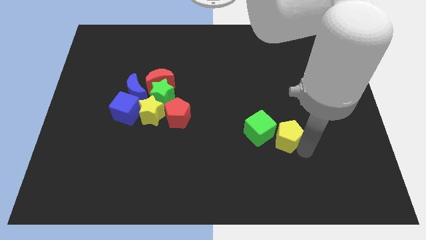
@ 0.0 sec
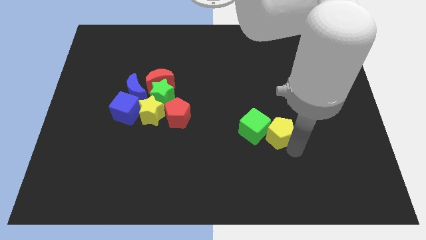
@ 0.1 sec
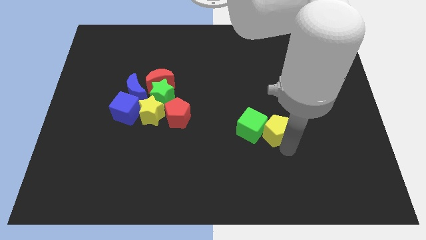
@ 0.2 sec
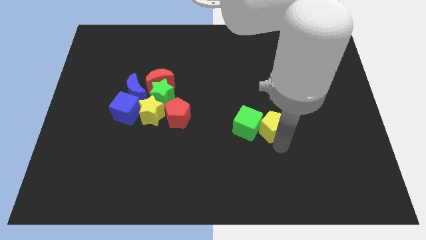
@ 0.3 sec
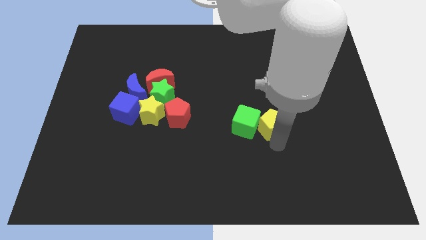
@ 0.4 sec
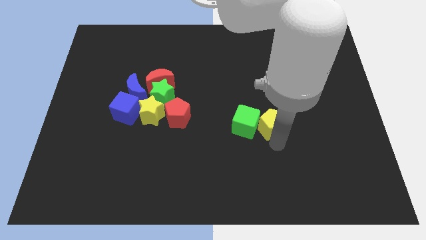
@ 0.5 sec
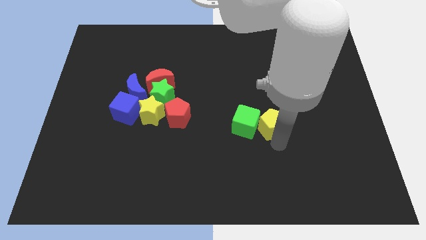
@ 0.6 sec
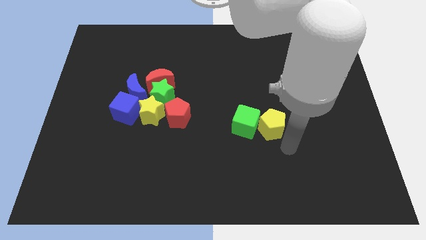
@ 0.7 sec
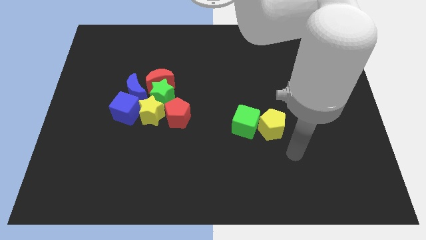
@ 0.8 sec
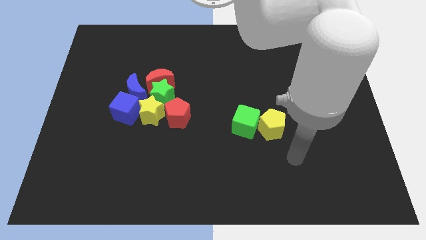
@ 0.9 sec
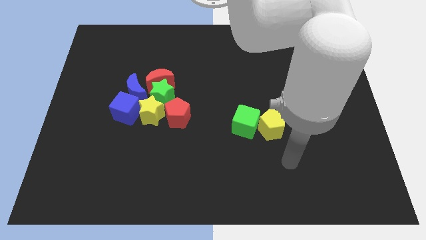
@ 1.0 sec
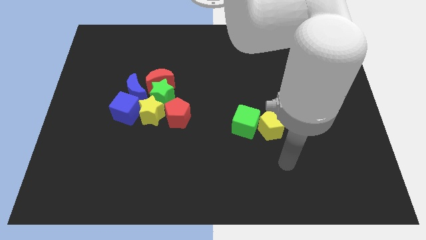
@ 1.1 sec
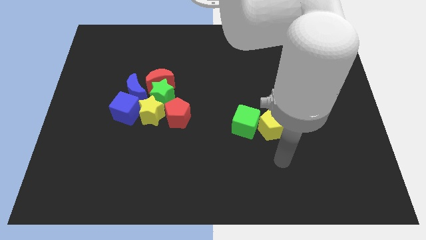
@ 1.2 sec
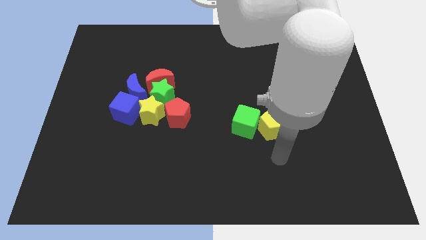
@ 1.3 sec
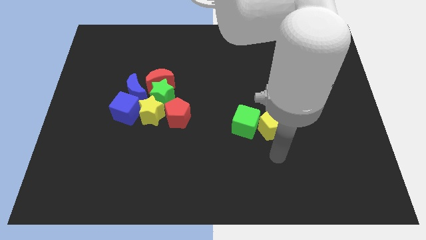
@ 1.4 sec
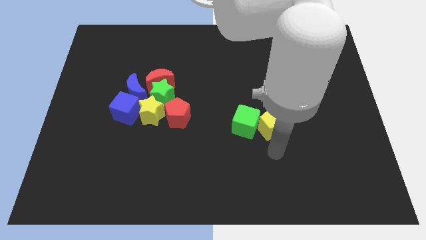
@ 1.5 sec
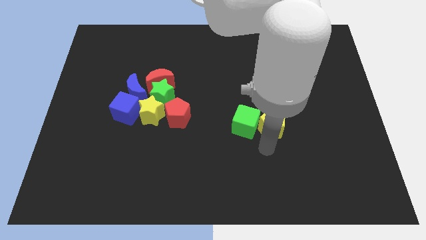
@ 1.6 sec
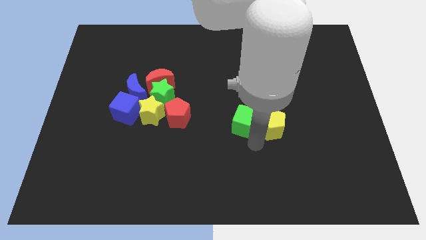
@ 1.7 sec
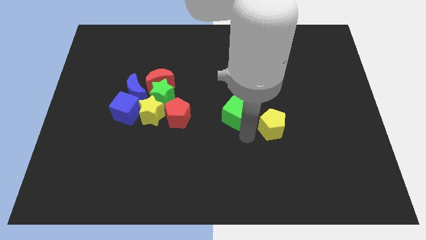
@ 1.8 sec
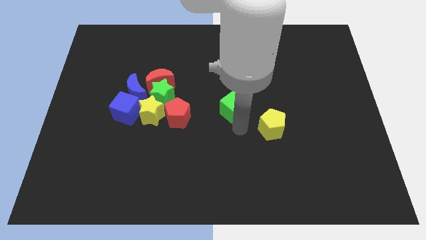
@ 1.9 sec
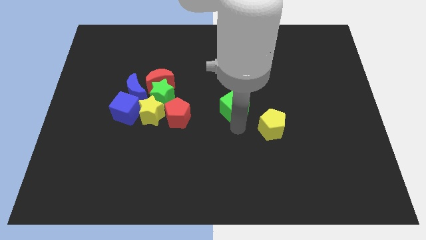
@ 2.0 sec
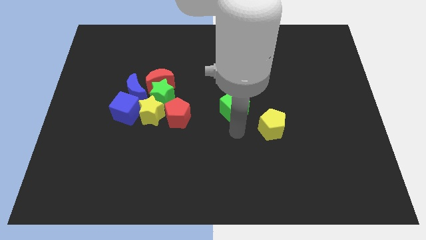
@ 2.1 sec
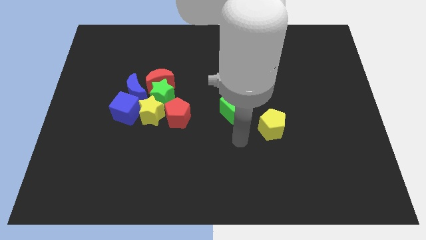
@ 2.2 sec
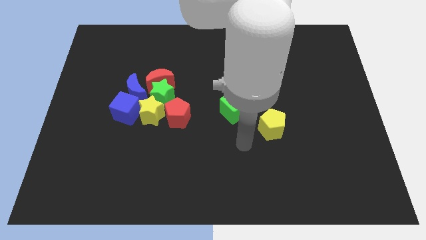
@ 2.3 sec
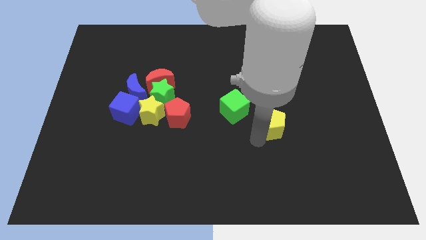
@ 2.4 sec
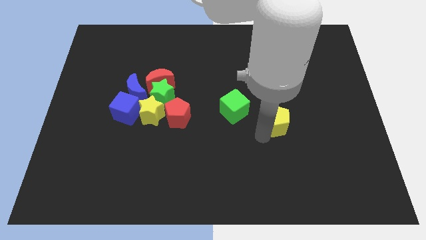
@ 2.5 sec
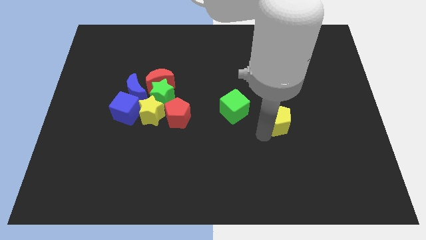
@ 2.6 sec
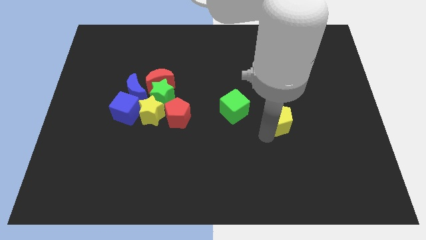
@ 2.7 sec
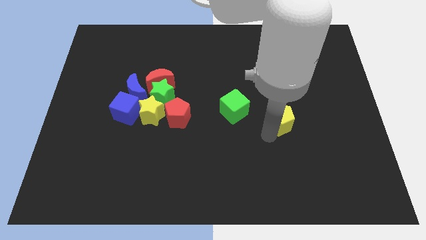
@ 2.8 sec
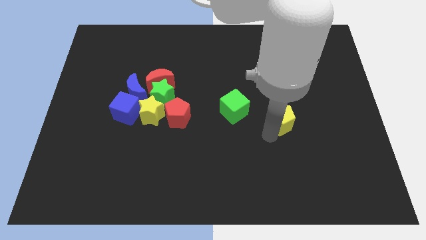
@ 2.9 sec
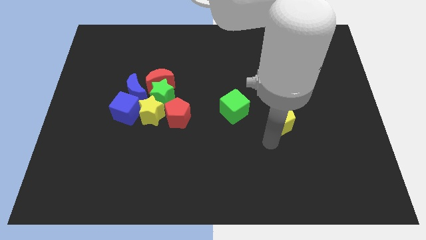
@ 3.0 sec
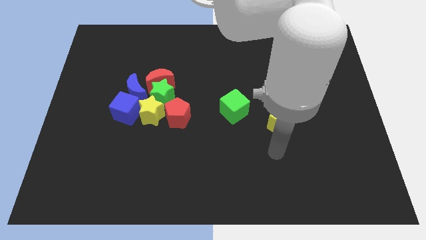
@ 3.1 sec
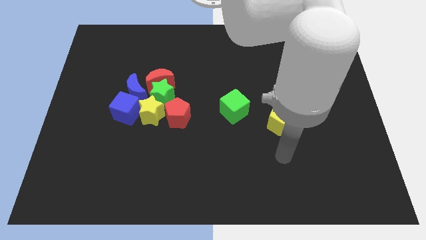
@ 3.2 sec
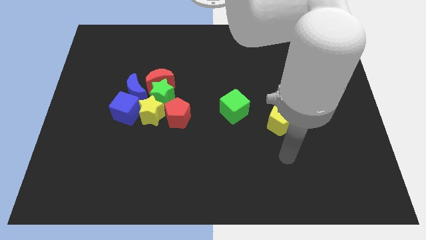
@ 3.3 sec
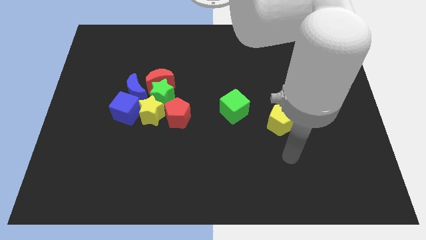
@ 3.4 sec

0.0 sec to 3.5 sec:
adjust the green cube and yellow pentagon horizontally to the right side of the red pentagon

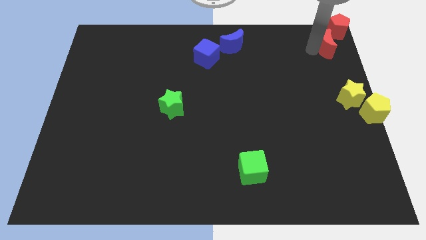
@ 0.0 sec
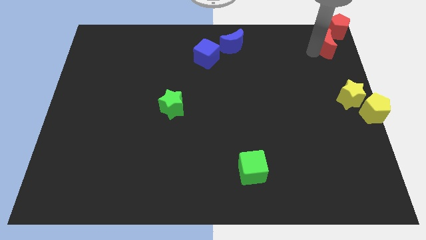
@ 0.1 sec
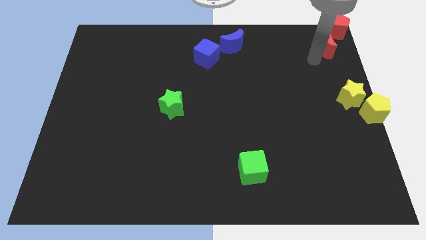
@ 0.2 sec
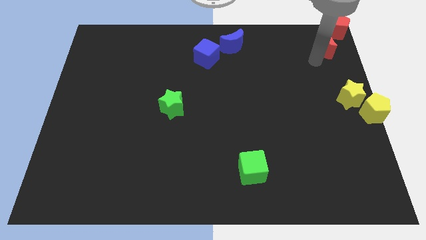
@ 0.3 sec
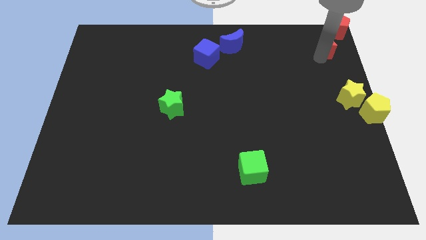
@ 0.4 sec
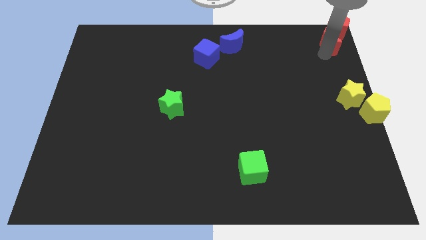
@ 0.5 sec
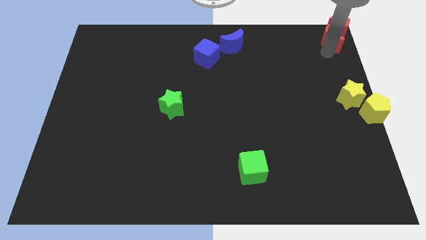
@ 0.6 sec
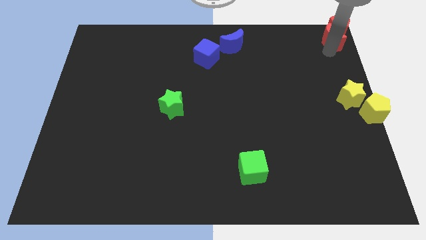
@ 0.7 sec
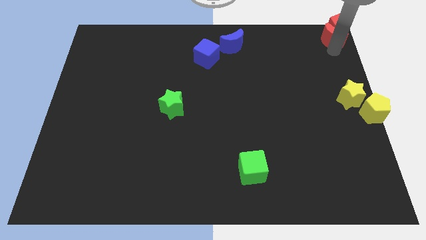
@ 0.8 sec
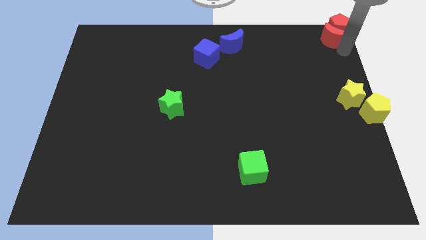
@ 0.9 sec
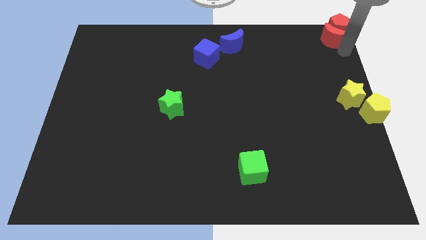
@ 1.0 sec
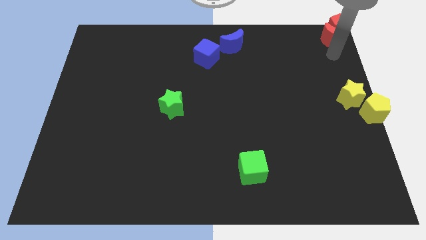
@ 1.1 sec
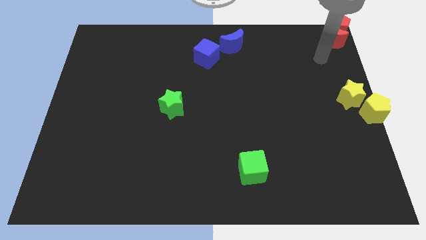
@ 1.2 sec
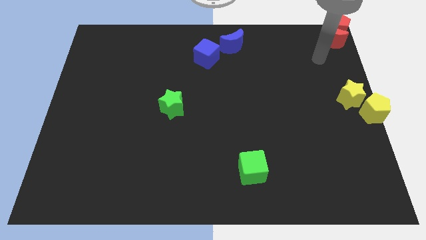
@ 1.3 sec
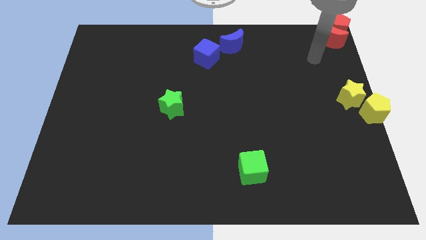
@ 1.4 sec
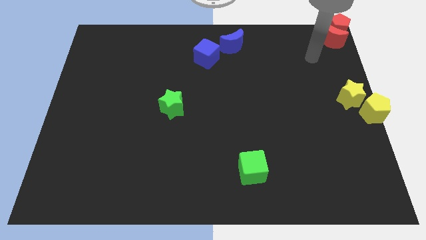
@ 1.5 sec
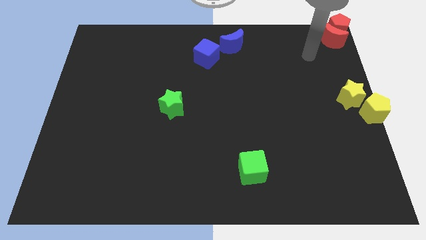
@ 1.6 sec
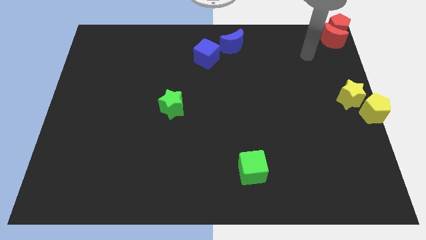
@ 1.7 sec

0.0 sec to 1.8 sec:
push the red crescent into the red pentagon

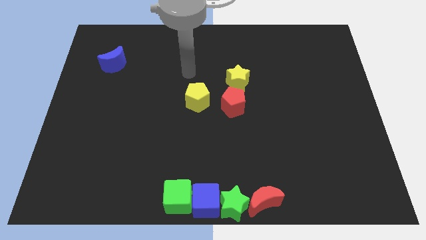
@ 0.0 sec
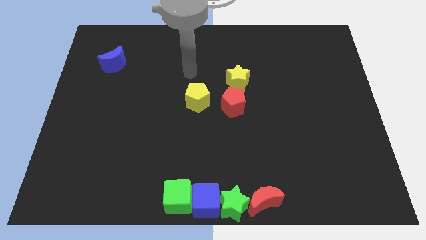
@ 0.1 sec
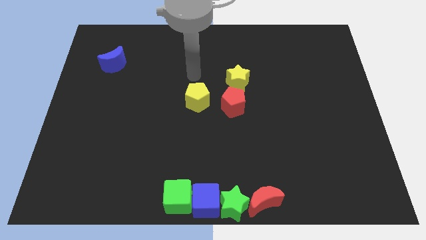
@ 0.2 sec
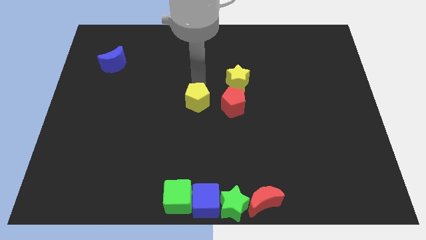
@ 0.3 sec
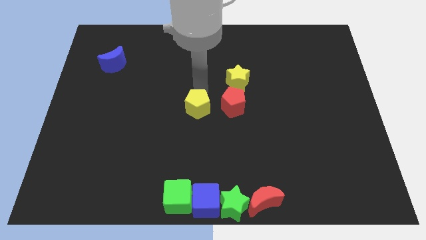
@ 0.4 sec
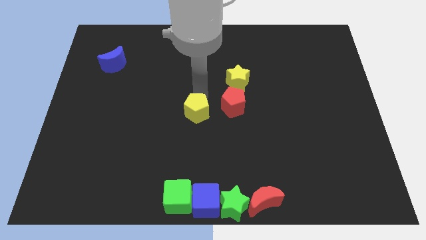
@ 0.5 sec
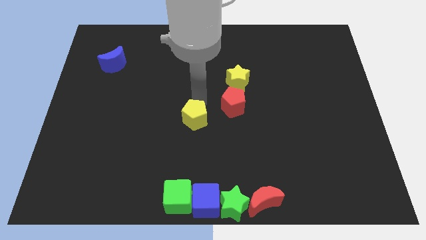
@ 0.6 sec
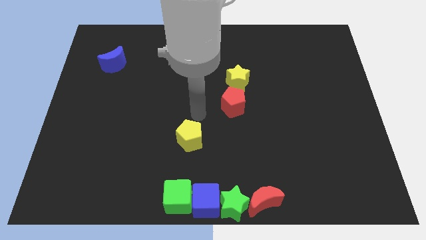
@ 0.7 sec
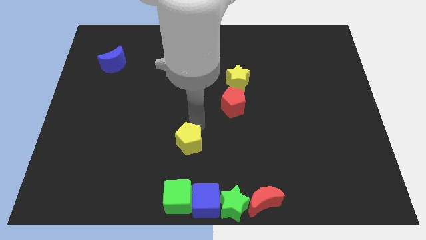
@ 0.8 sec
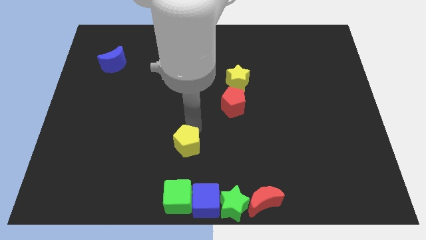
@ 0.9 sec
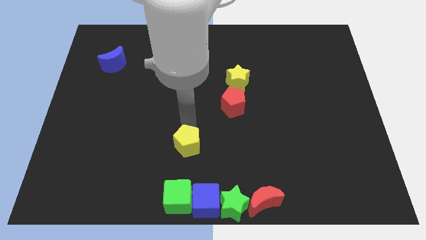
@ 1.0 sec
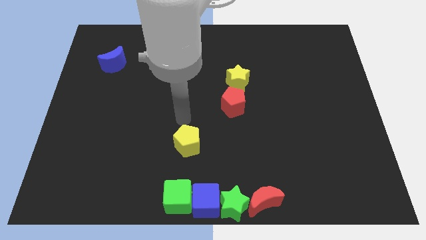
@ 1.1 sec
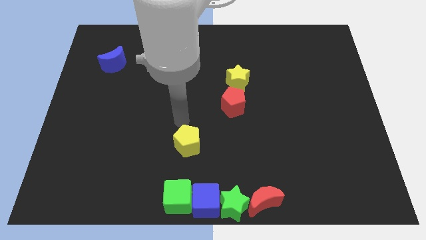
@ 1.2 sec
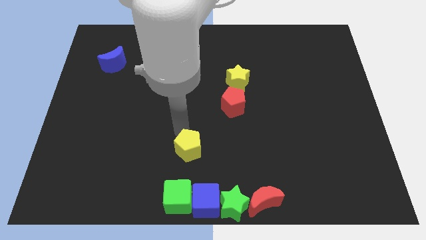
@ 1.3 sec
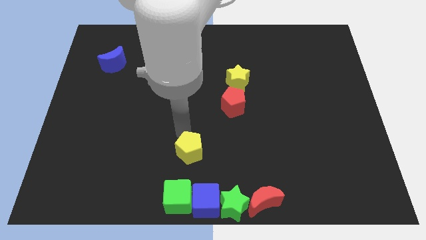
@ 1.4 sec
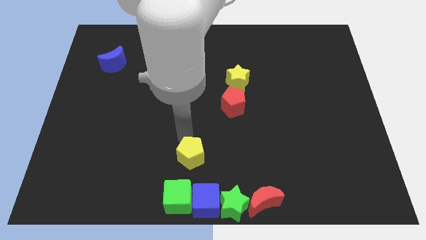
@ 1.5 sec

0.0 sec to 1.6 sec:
slightly move the yellow pentagon towards down

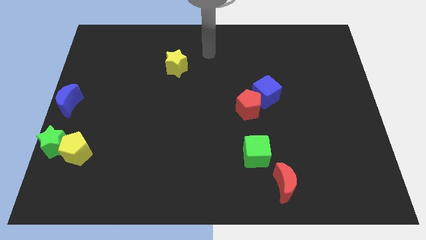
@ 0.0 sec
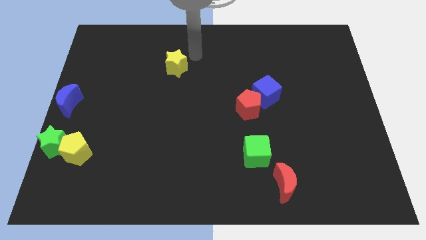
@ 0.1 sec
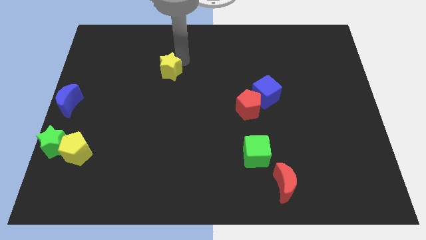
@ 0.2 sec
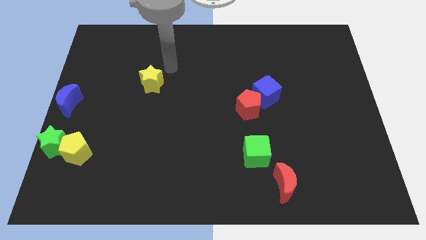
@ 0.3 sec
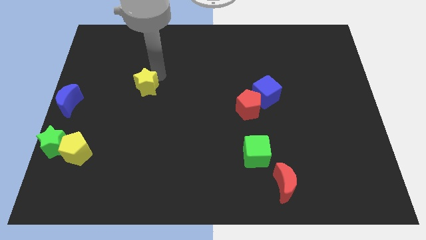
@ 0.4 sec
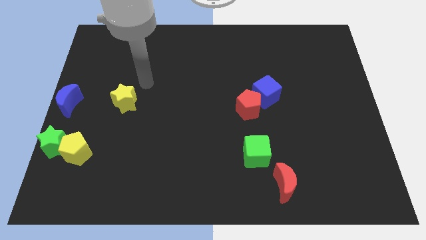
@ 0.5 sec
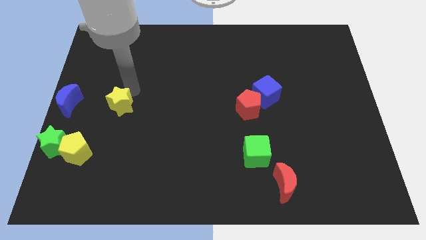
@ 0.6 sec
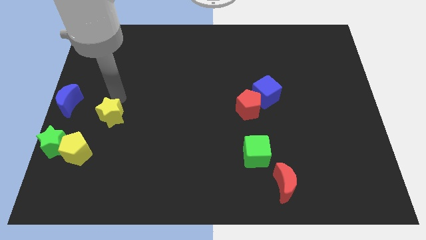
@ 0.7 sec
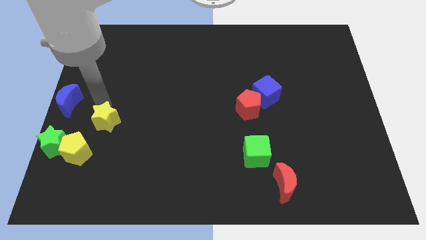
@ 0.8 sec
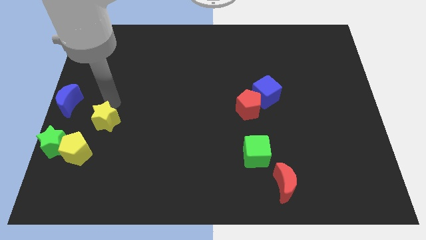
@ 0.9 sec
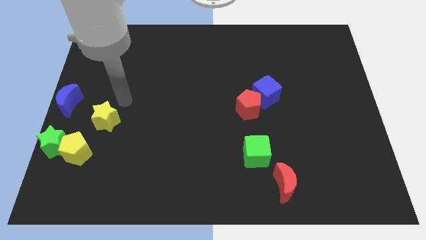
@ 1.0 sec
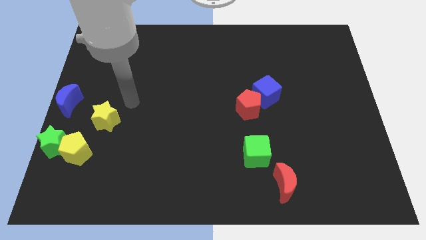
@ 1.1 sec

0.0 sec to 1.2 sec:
move the yellow star towards the bottom left

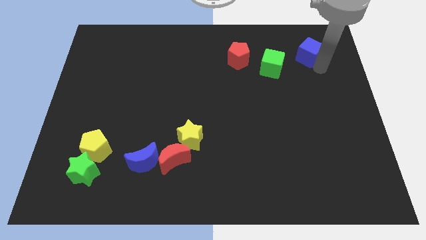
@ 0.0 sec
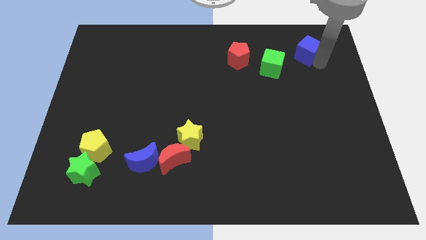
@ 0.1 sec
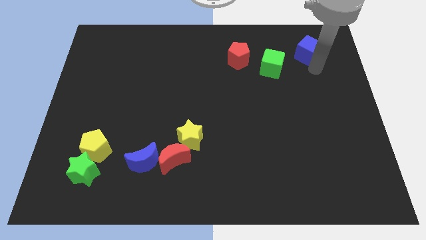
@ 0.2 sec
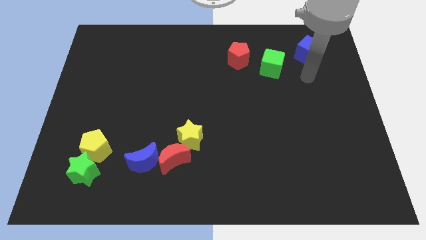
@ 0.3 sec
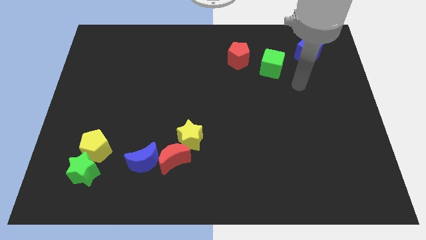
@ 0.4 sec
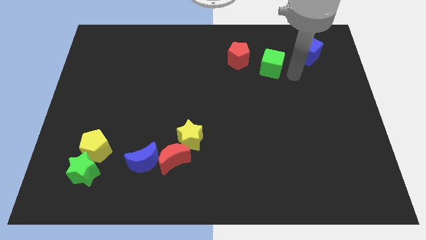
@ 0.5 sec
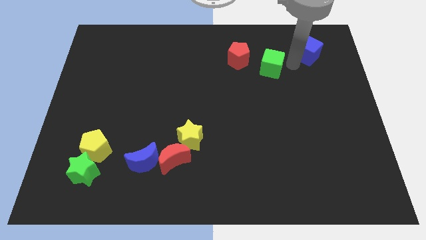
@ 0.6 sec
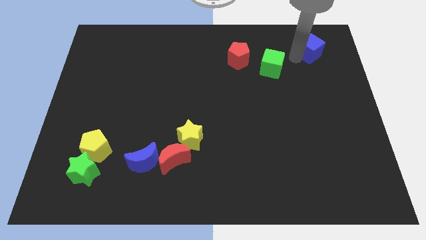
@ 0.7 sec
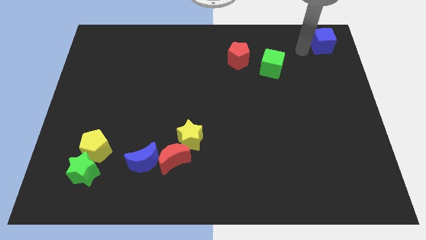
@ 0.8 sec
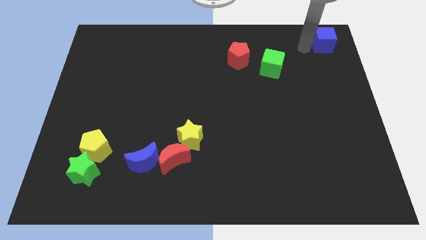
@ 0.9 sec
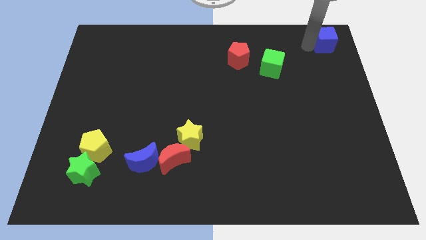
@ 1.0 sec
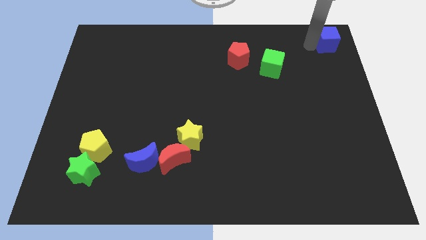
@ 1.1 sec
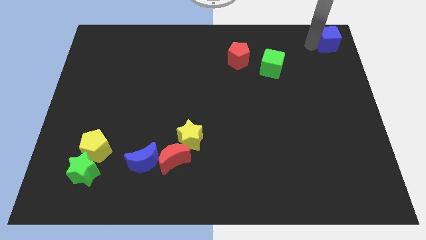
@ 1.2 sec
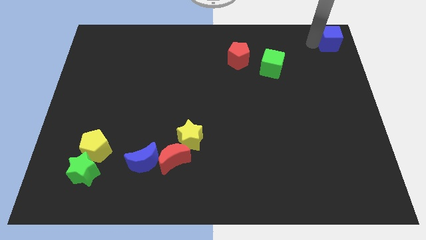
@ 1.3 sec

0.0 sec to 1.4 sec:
push blue cube to the top right corner of the board
